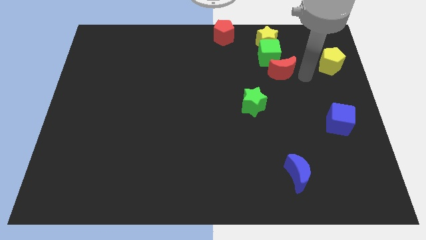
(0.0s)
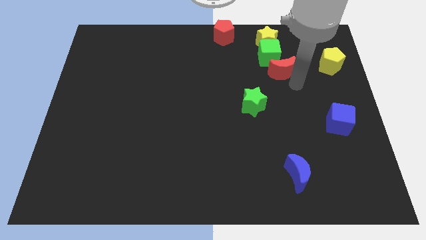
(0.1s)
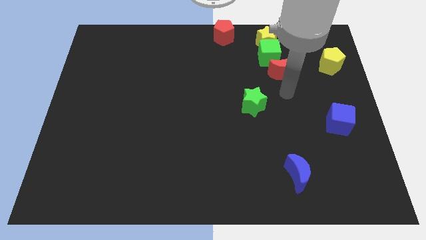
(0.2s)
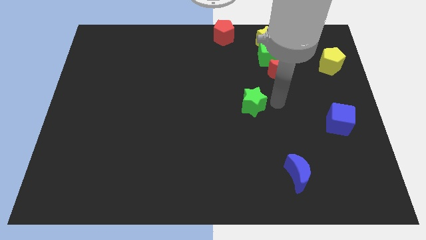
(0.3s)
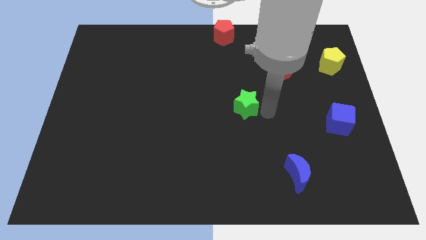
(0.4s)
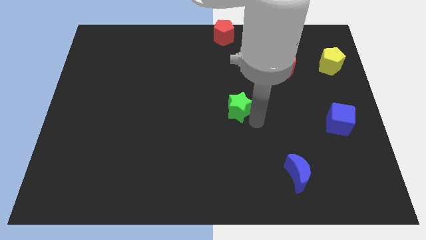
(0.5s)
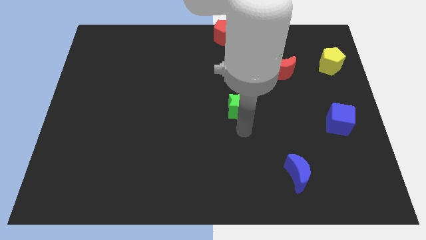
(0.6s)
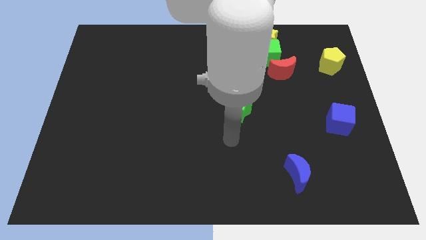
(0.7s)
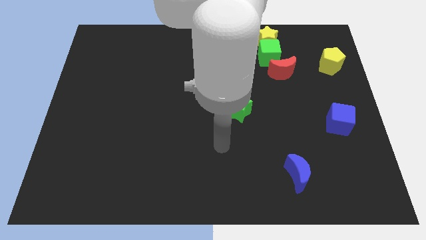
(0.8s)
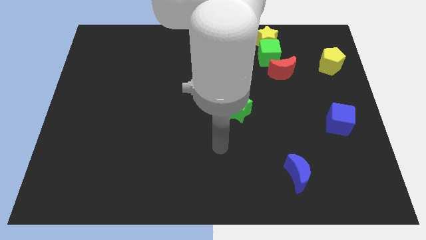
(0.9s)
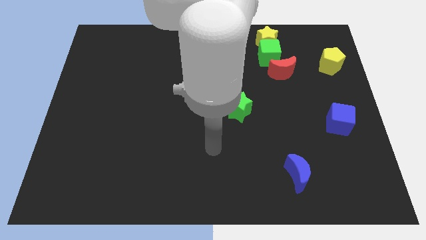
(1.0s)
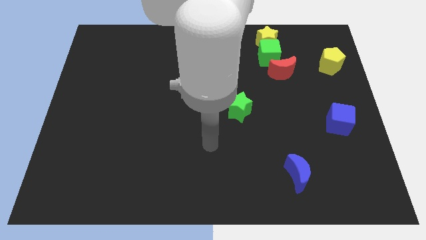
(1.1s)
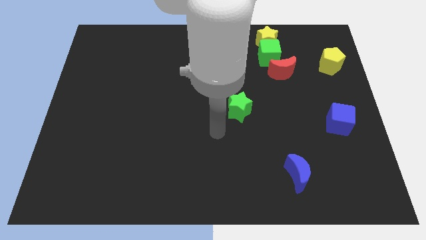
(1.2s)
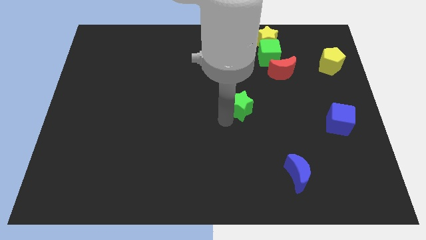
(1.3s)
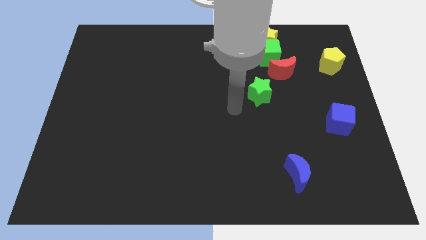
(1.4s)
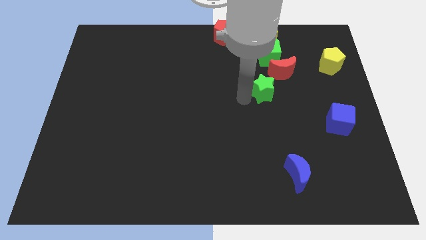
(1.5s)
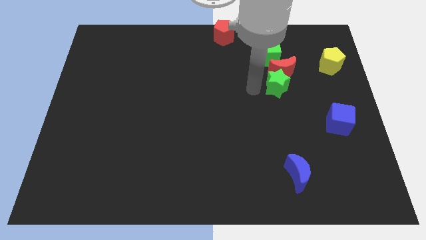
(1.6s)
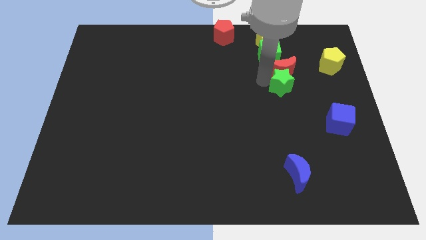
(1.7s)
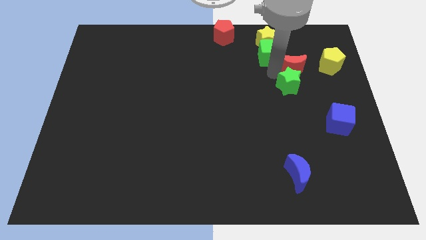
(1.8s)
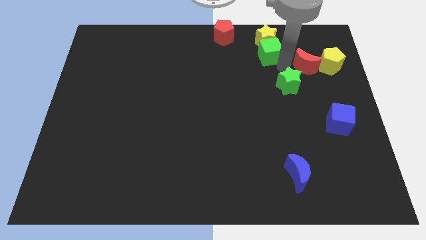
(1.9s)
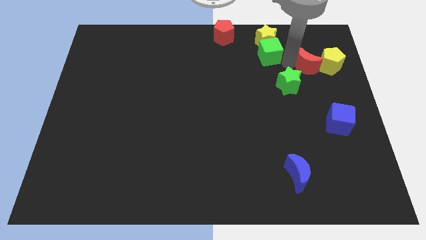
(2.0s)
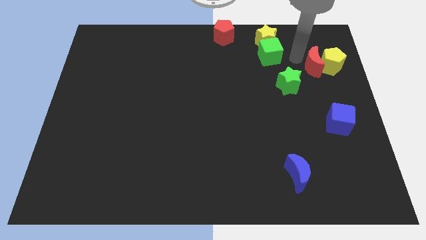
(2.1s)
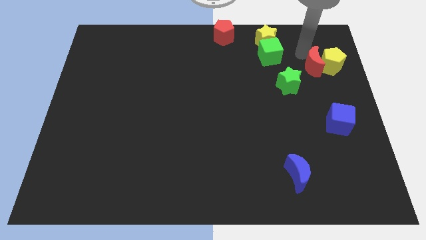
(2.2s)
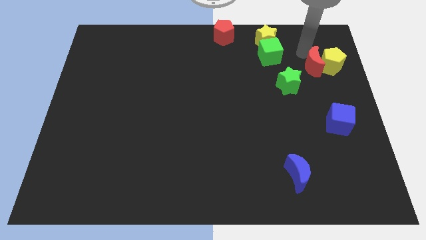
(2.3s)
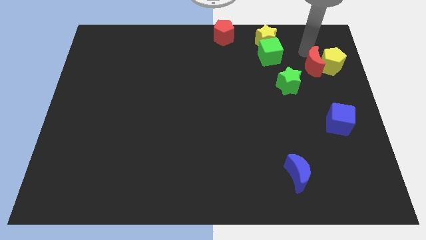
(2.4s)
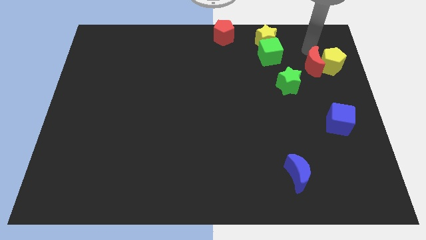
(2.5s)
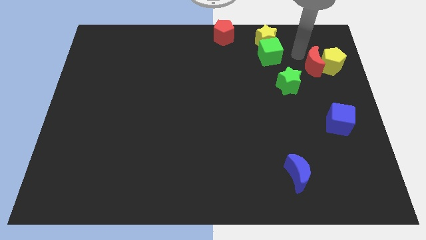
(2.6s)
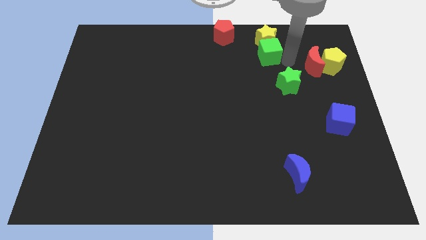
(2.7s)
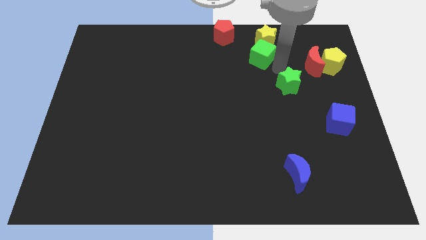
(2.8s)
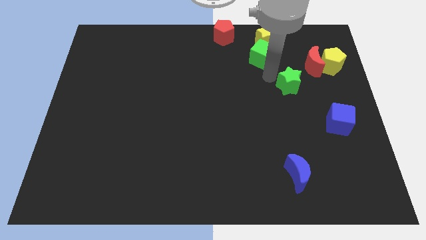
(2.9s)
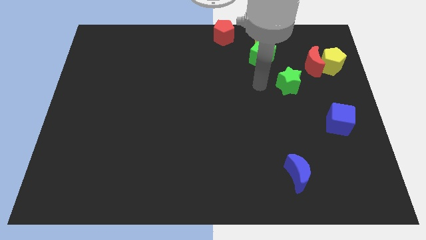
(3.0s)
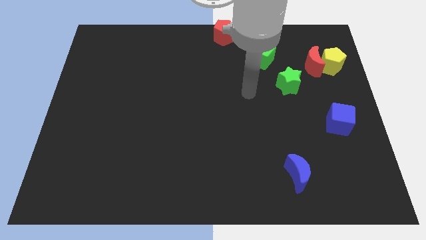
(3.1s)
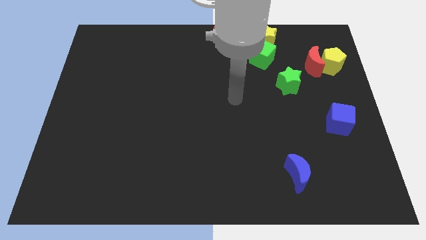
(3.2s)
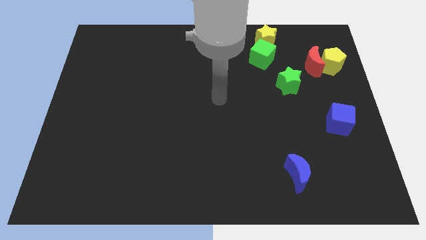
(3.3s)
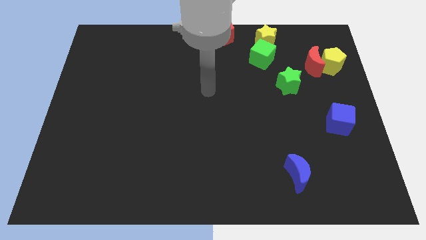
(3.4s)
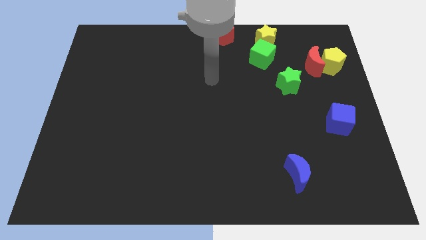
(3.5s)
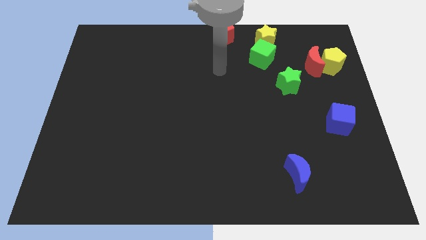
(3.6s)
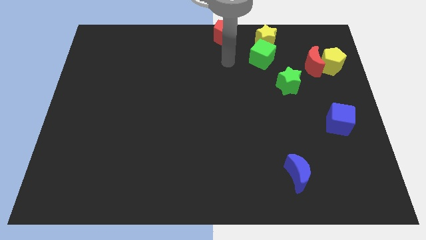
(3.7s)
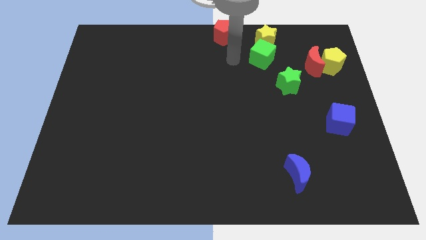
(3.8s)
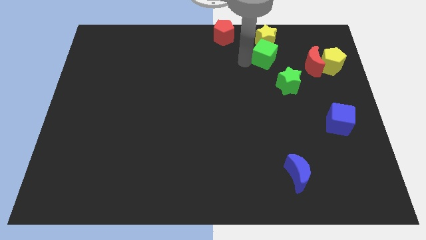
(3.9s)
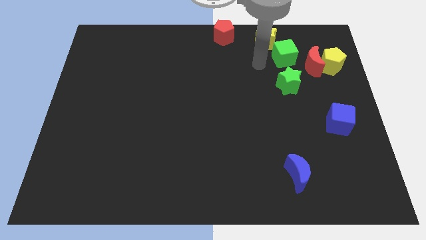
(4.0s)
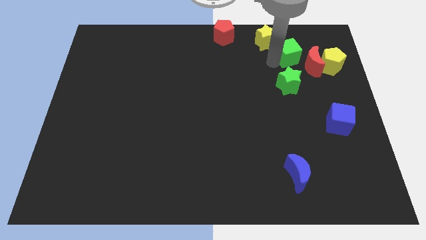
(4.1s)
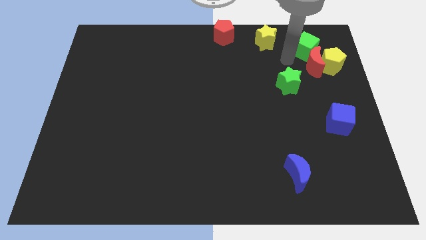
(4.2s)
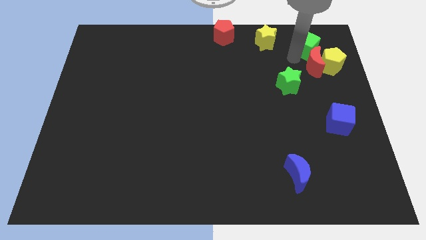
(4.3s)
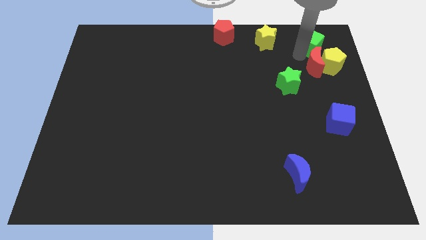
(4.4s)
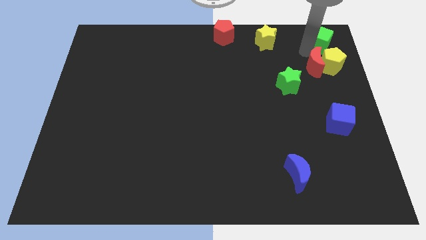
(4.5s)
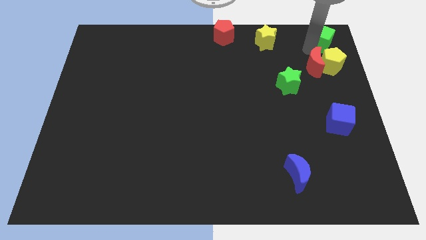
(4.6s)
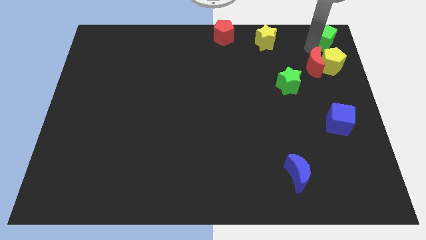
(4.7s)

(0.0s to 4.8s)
move the green cube yellow pentagon and the red crescent to the top right corner of the board

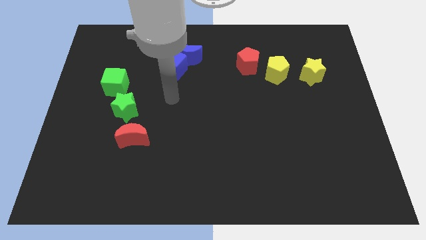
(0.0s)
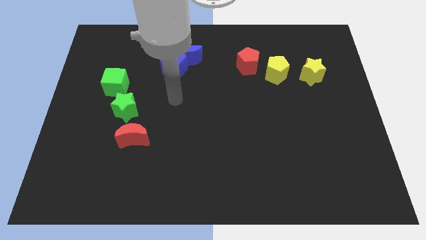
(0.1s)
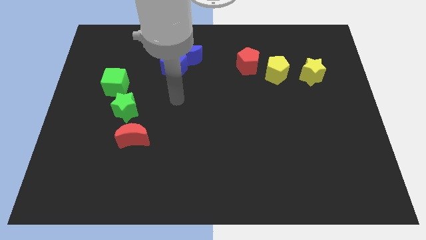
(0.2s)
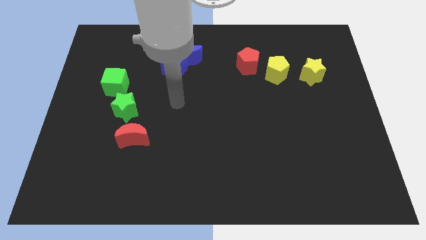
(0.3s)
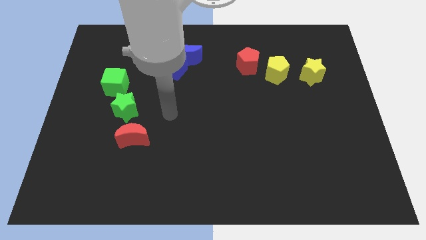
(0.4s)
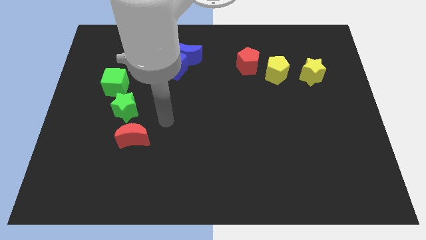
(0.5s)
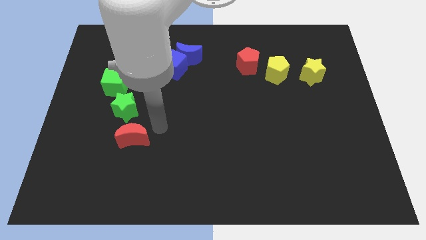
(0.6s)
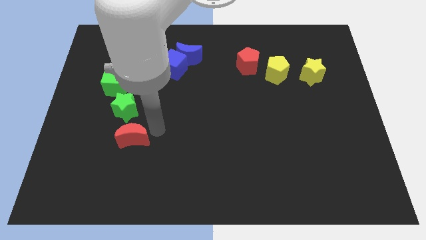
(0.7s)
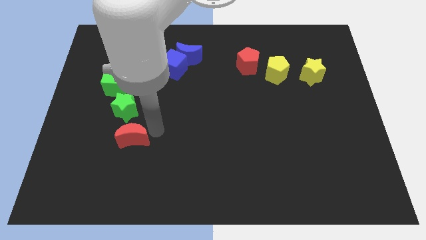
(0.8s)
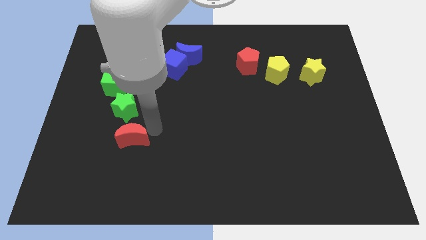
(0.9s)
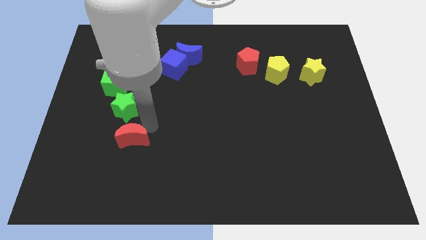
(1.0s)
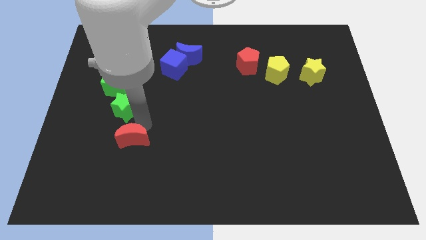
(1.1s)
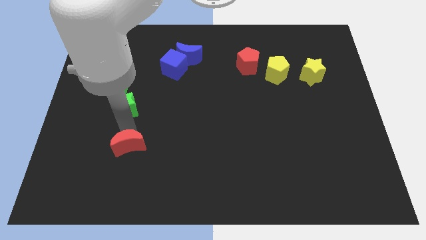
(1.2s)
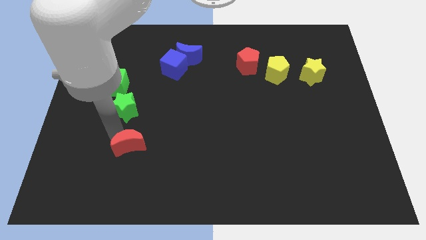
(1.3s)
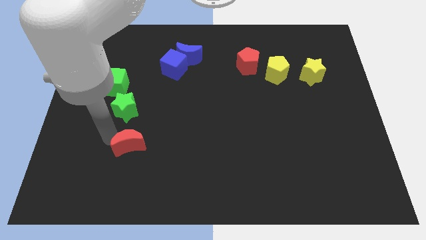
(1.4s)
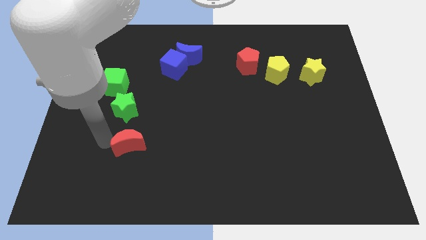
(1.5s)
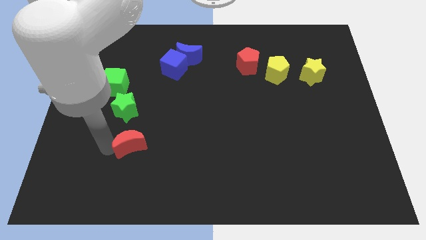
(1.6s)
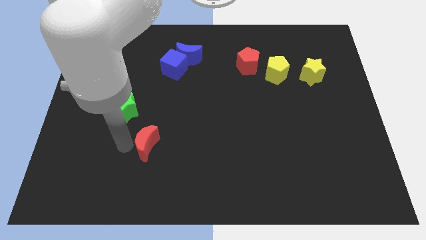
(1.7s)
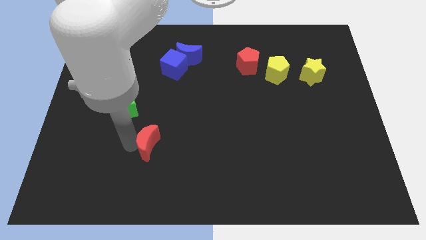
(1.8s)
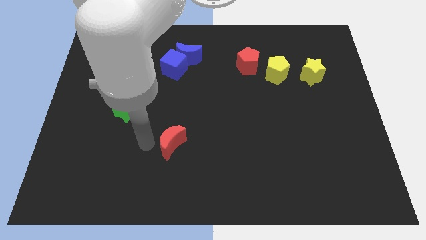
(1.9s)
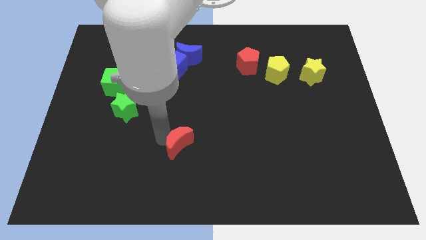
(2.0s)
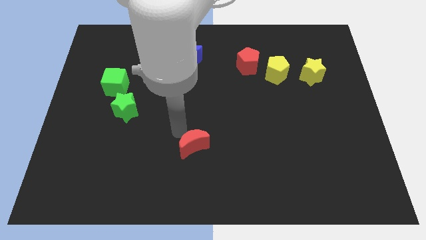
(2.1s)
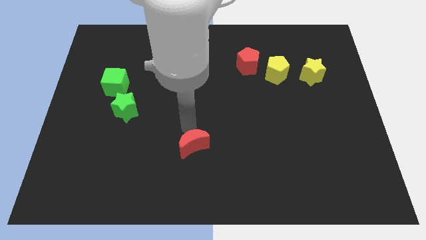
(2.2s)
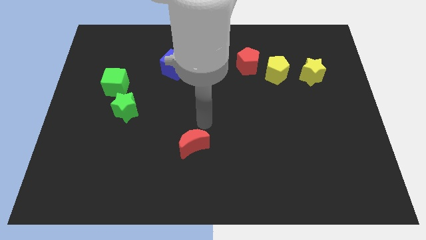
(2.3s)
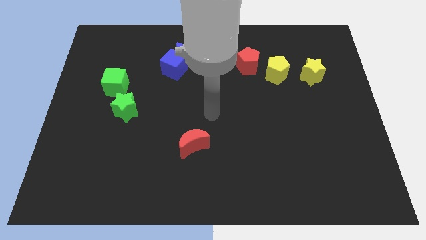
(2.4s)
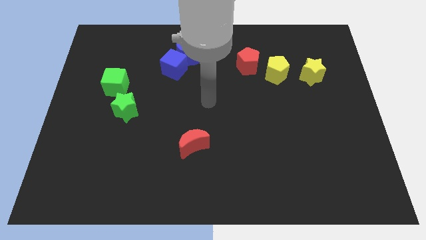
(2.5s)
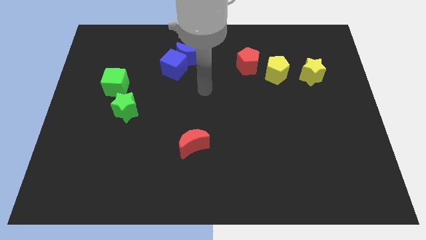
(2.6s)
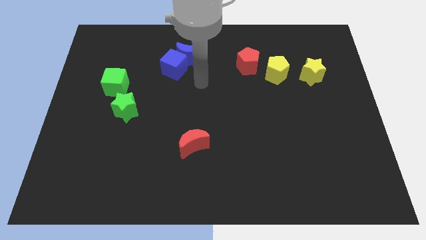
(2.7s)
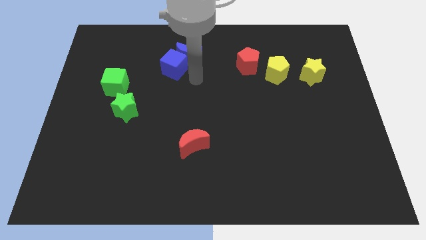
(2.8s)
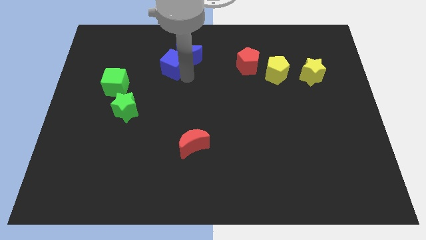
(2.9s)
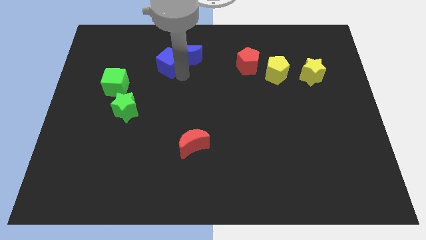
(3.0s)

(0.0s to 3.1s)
slide the red crescent diagonally to red pentagon

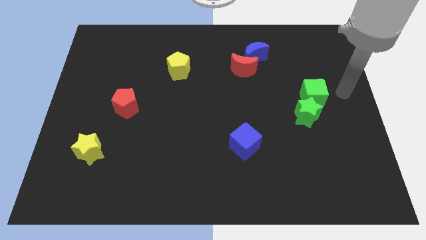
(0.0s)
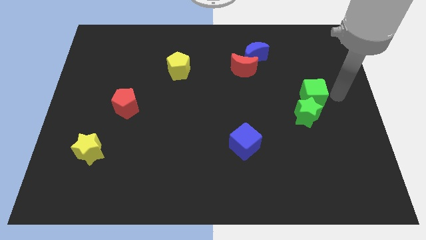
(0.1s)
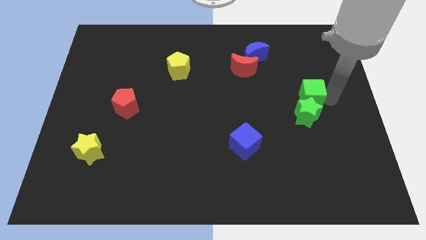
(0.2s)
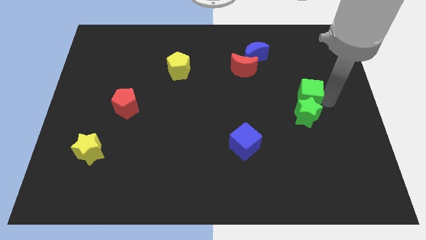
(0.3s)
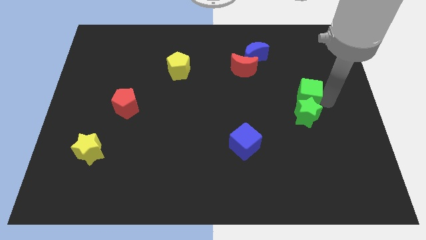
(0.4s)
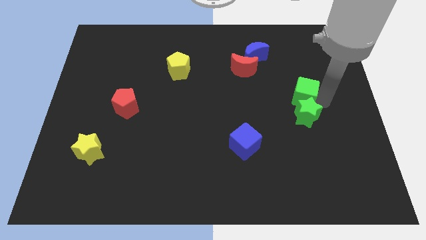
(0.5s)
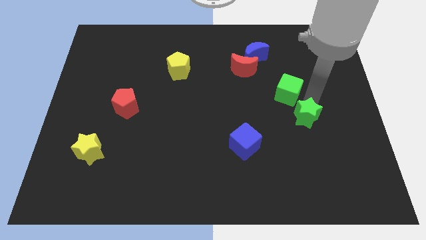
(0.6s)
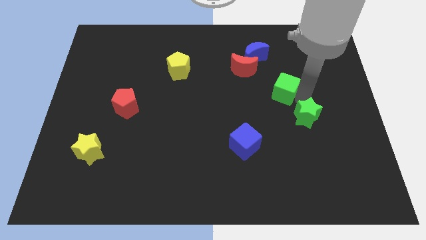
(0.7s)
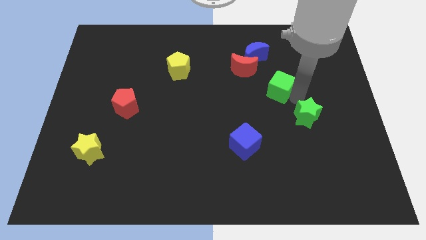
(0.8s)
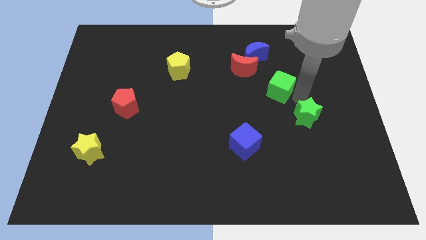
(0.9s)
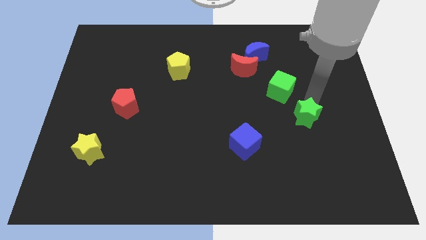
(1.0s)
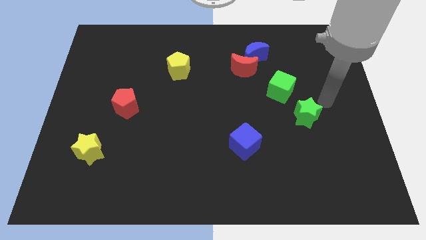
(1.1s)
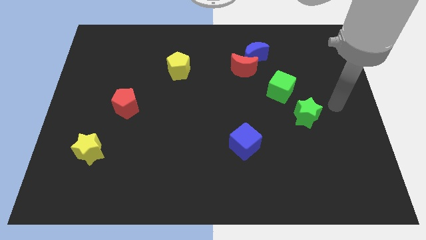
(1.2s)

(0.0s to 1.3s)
push the green star diagonally in between the green cube and the blue cube
